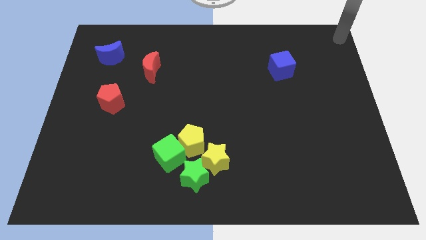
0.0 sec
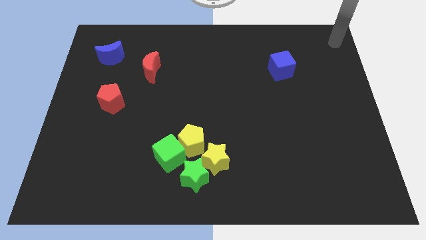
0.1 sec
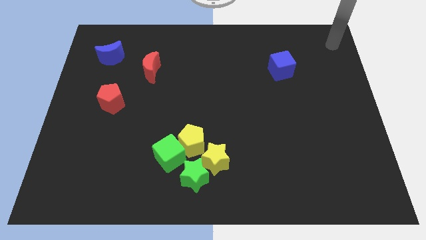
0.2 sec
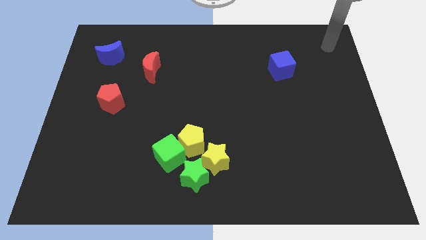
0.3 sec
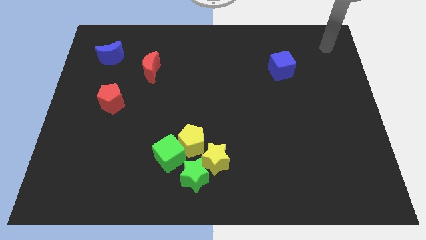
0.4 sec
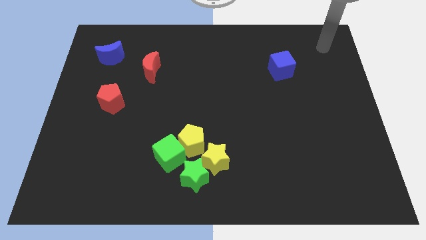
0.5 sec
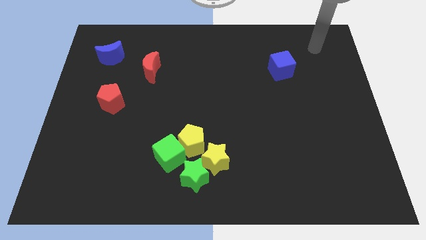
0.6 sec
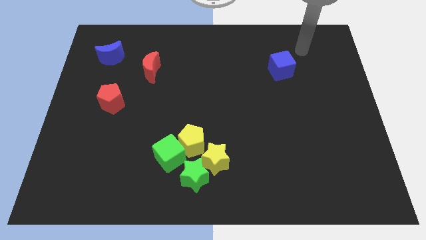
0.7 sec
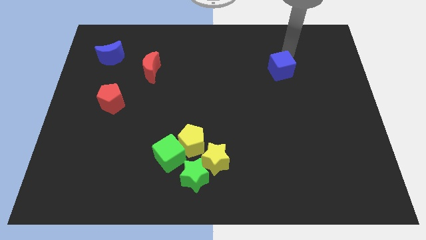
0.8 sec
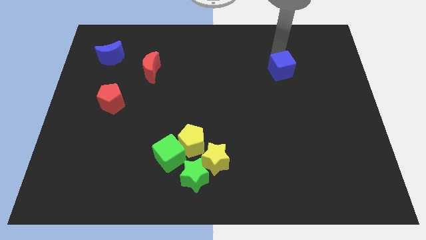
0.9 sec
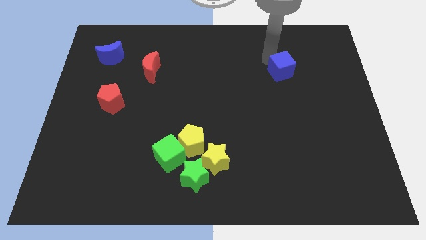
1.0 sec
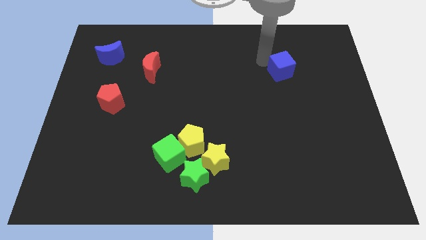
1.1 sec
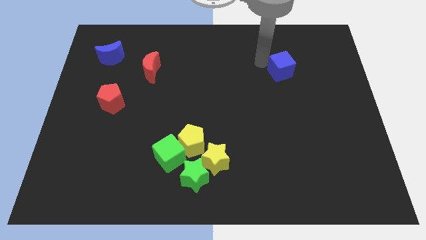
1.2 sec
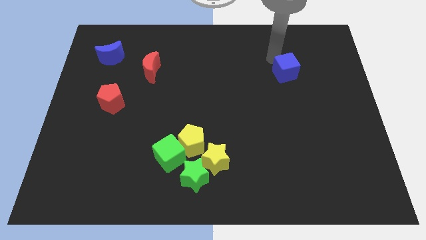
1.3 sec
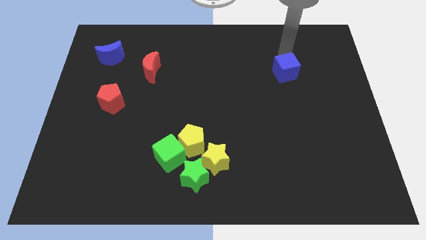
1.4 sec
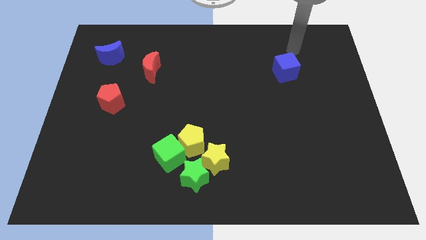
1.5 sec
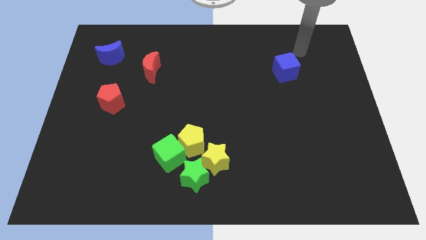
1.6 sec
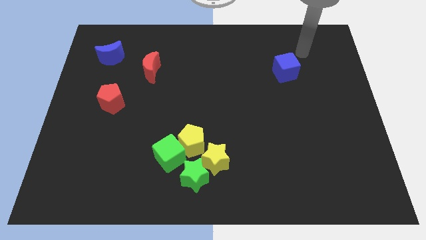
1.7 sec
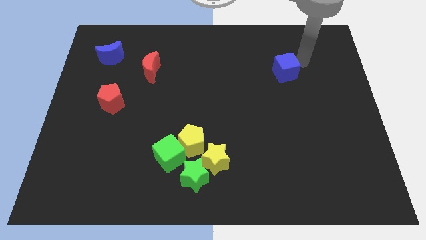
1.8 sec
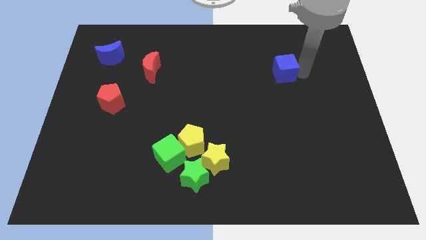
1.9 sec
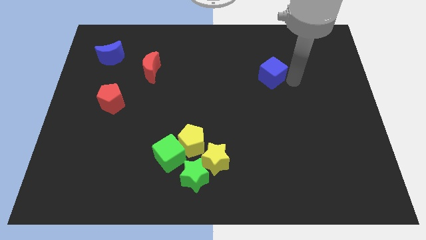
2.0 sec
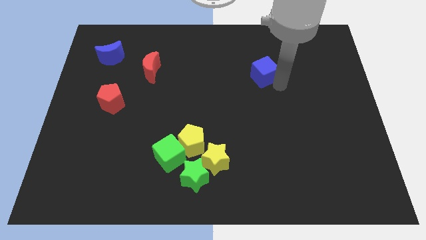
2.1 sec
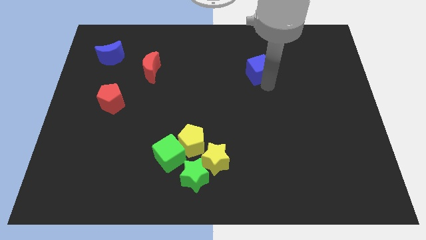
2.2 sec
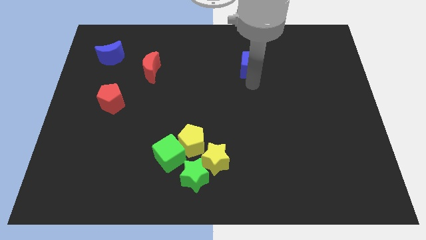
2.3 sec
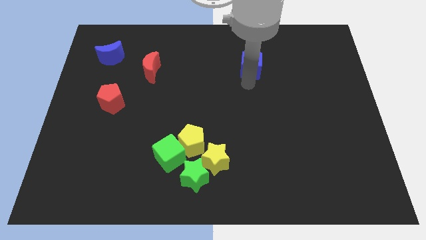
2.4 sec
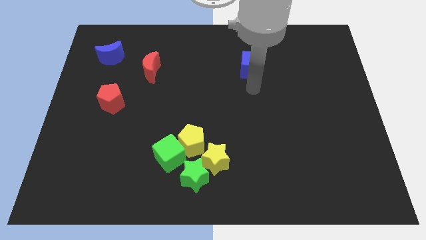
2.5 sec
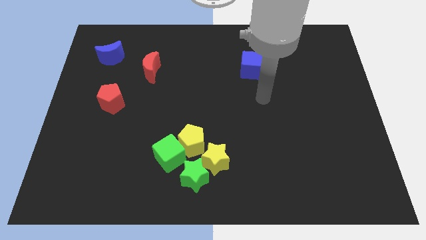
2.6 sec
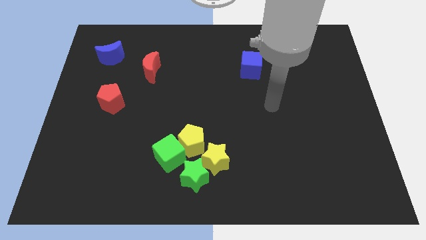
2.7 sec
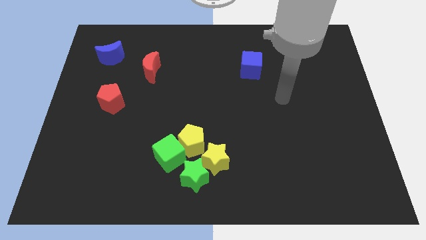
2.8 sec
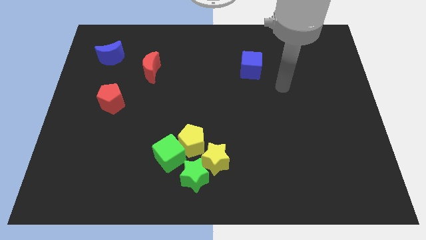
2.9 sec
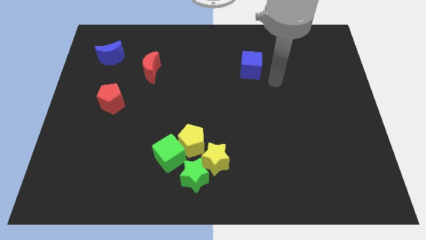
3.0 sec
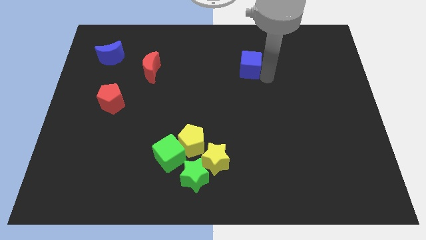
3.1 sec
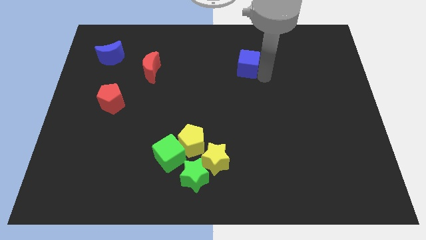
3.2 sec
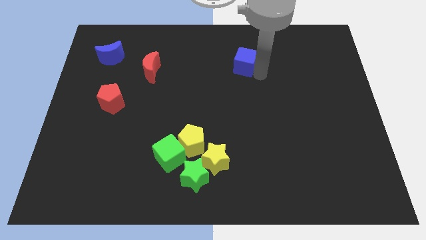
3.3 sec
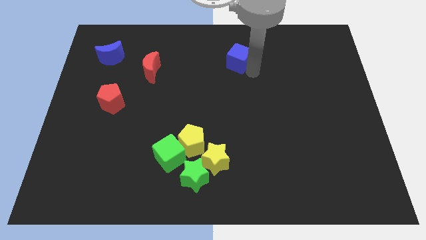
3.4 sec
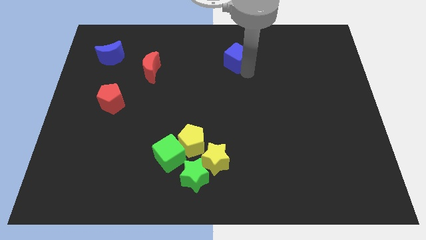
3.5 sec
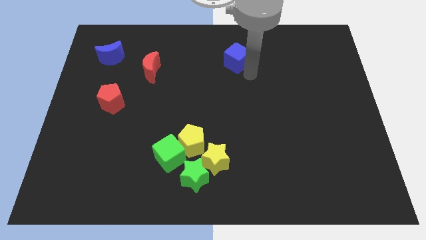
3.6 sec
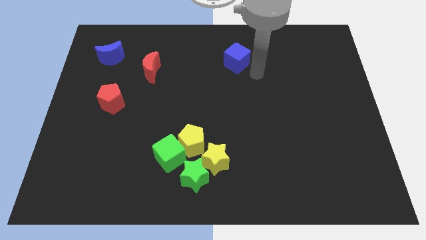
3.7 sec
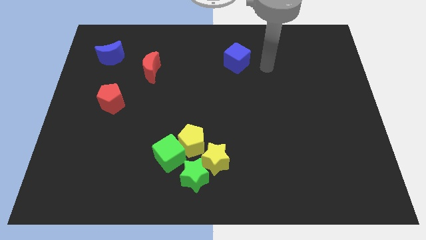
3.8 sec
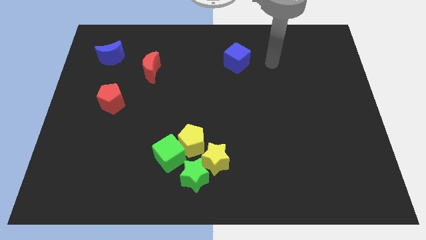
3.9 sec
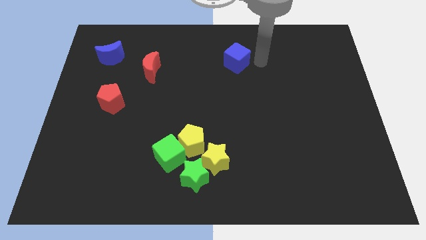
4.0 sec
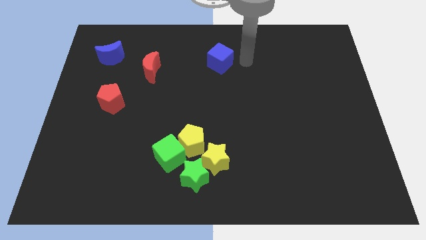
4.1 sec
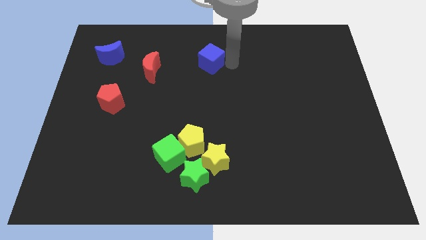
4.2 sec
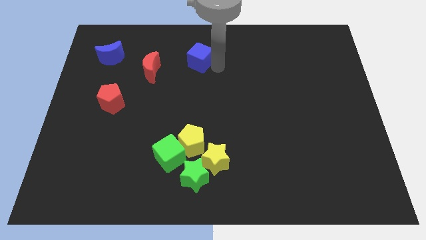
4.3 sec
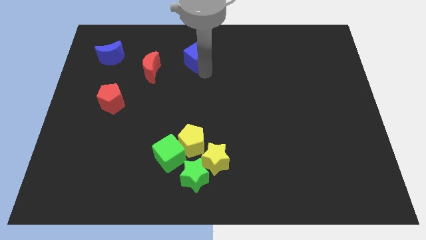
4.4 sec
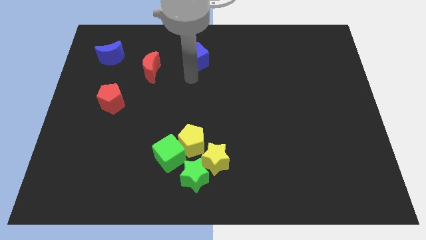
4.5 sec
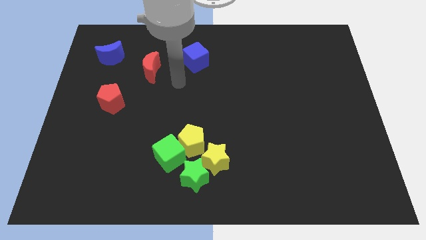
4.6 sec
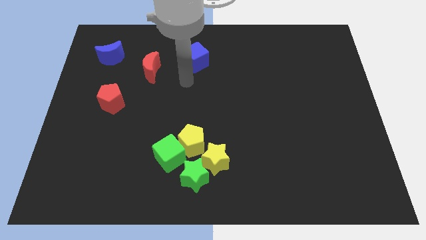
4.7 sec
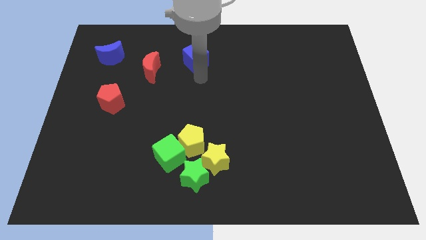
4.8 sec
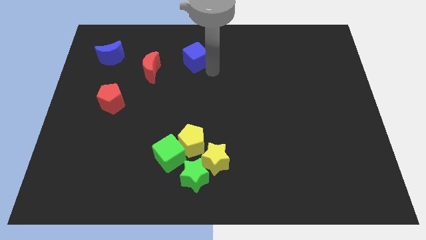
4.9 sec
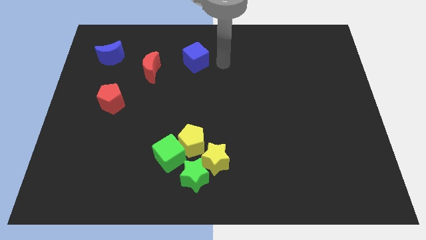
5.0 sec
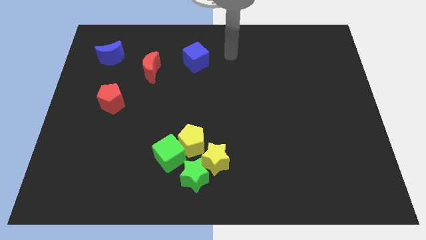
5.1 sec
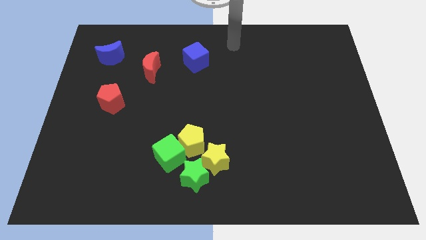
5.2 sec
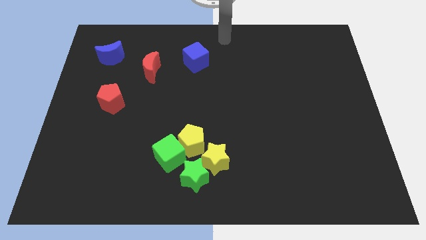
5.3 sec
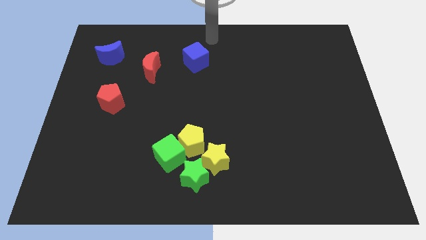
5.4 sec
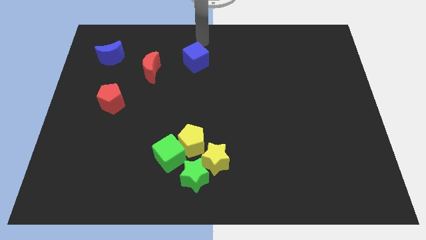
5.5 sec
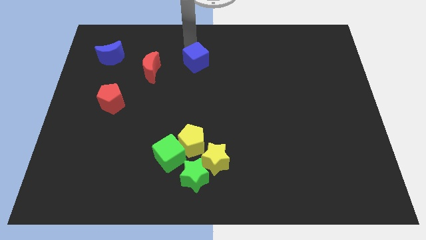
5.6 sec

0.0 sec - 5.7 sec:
place the blue cube above the group of blocks

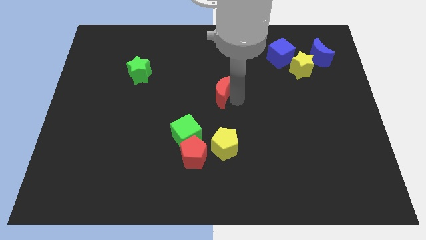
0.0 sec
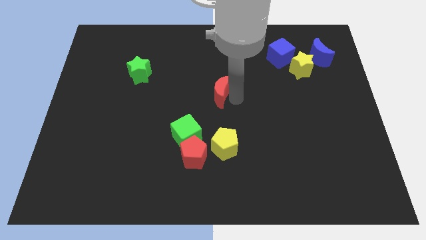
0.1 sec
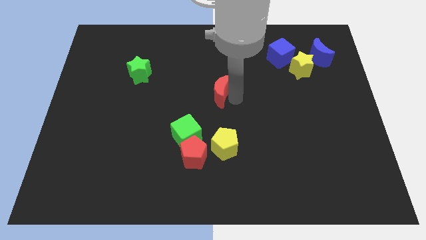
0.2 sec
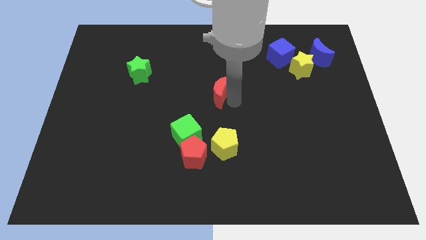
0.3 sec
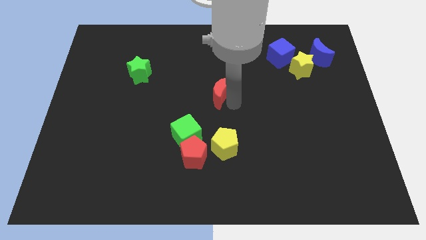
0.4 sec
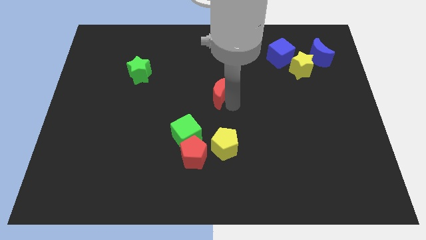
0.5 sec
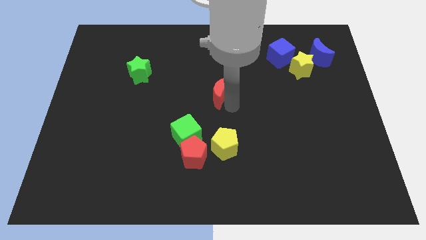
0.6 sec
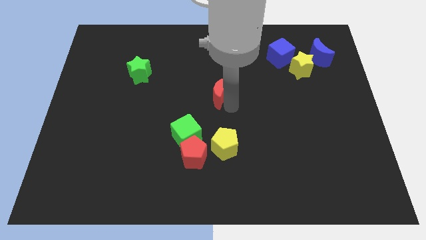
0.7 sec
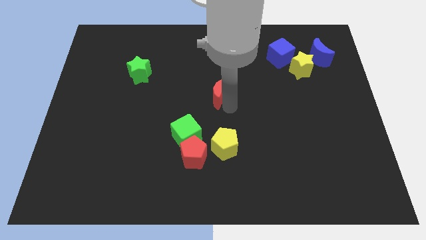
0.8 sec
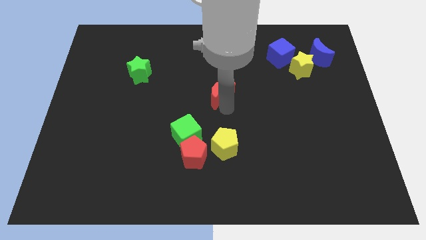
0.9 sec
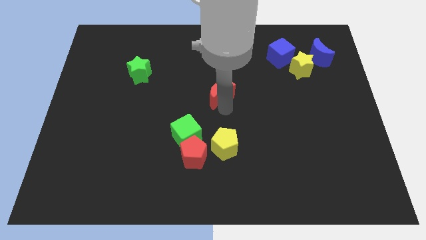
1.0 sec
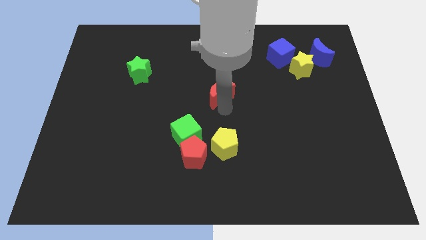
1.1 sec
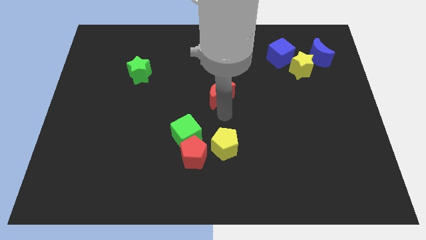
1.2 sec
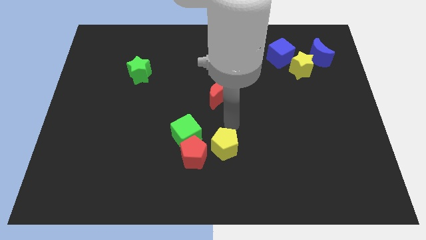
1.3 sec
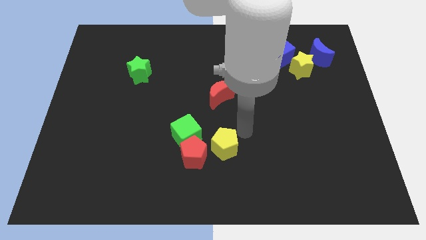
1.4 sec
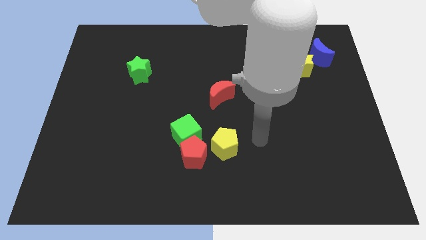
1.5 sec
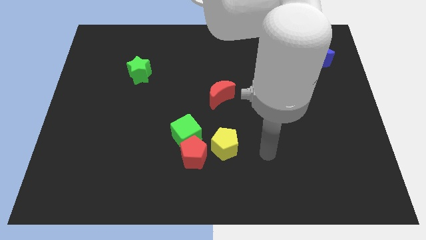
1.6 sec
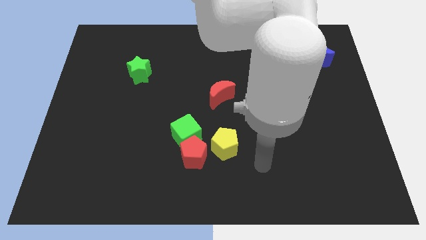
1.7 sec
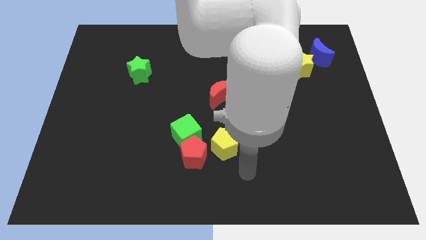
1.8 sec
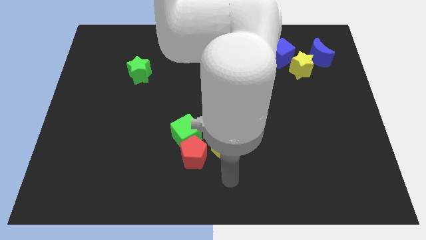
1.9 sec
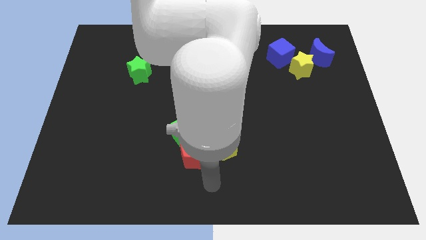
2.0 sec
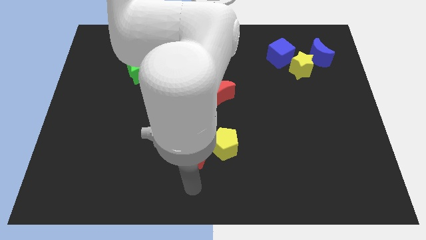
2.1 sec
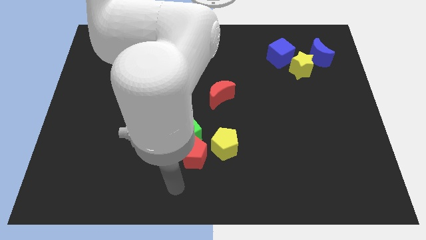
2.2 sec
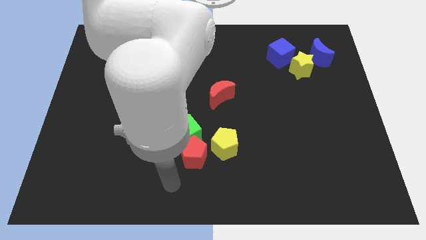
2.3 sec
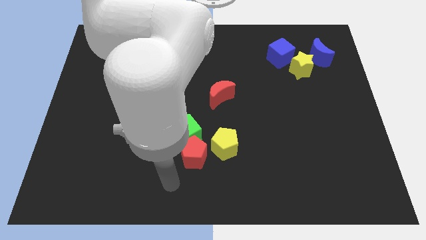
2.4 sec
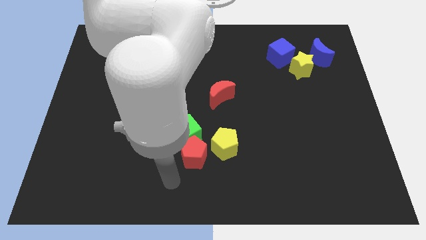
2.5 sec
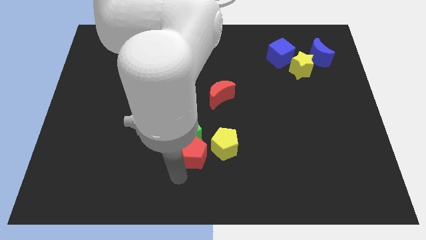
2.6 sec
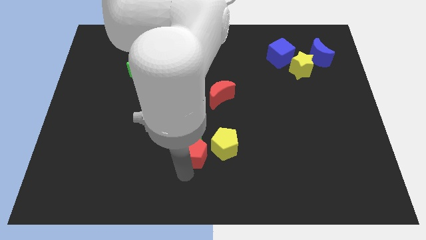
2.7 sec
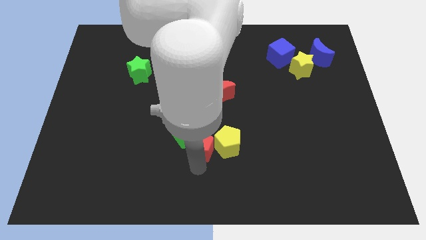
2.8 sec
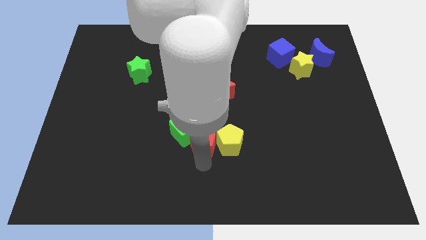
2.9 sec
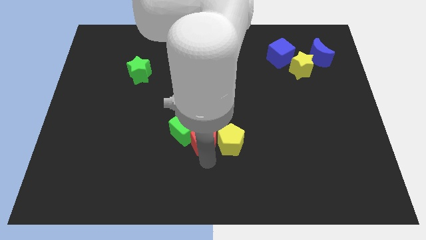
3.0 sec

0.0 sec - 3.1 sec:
push the red pentagon towards the red moon

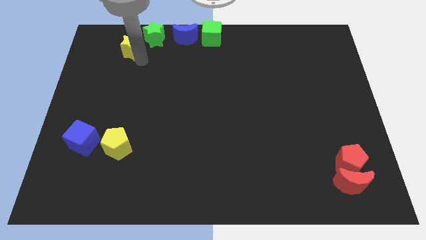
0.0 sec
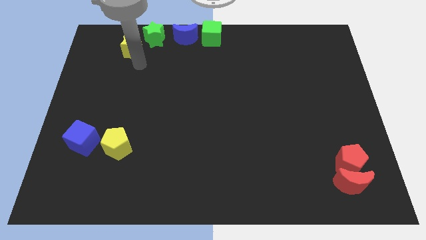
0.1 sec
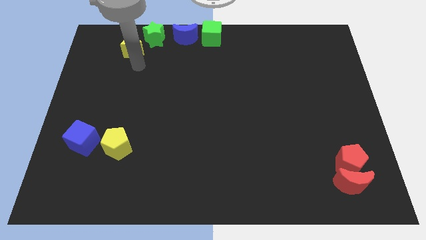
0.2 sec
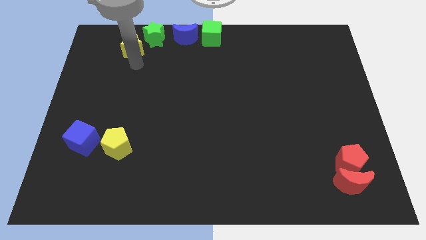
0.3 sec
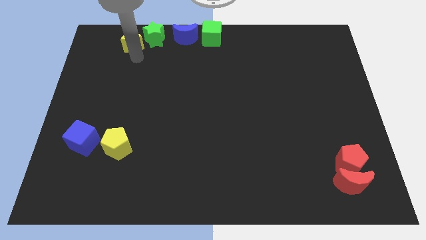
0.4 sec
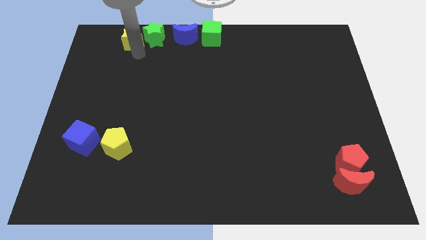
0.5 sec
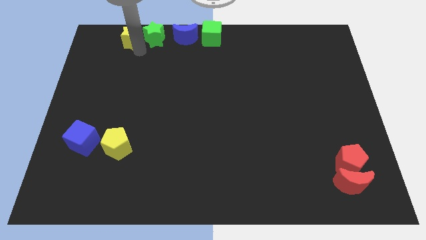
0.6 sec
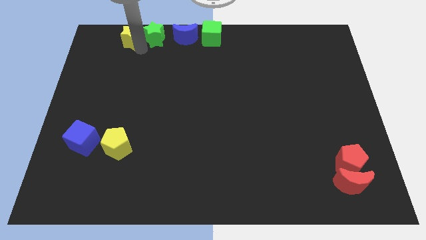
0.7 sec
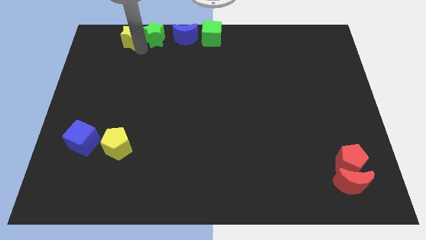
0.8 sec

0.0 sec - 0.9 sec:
place the yellow star to the left of the green star
